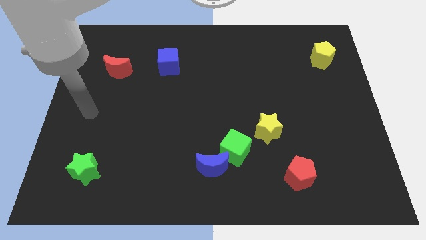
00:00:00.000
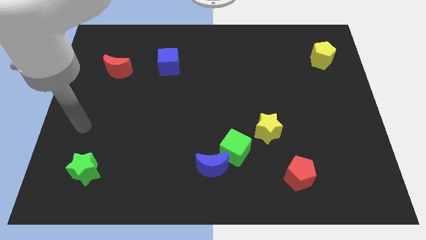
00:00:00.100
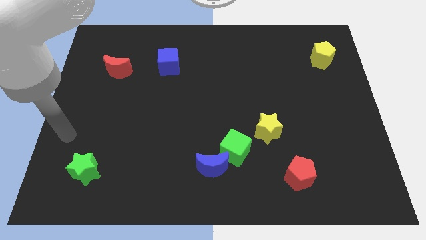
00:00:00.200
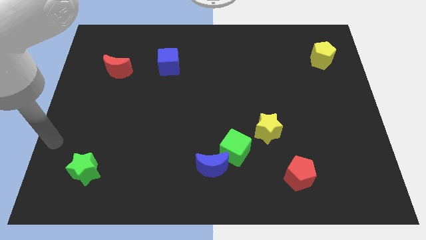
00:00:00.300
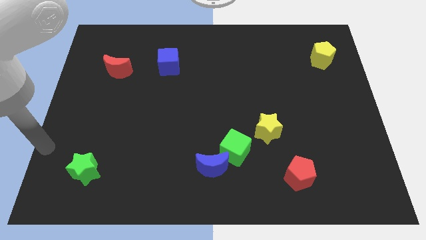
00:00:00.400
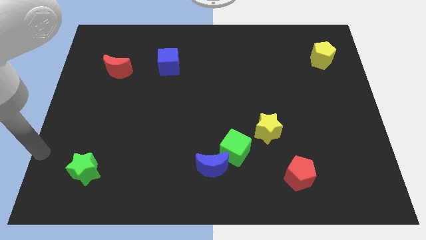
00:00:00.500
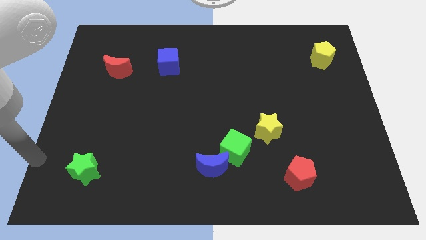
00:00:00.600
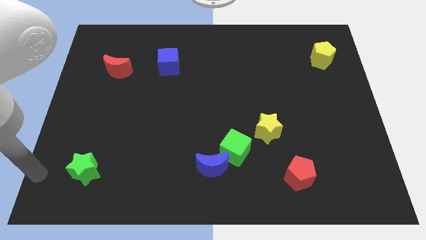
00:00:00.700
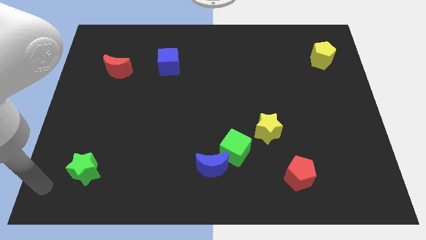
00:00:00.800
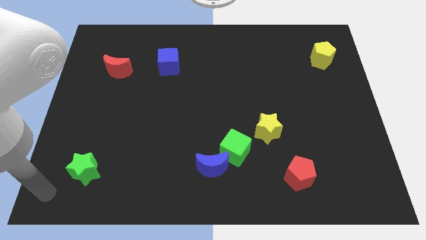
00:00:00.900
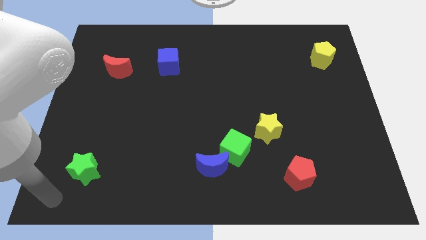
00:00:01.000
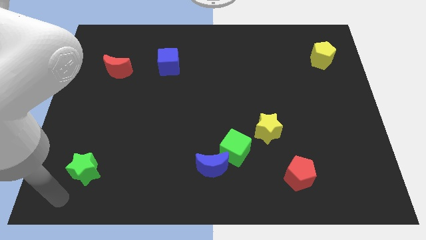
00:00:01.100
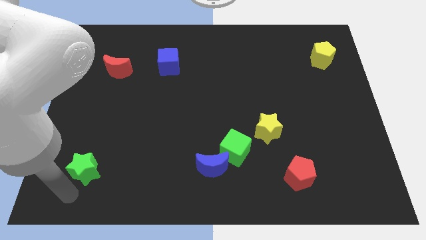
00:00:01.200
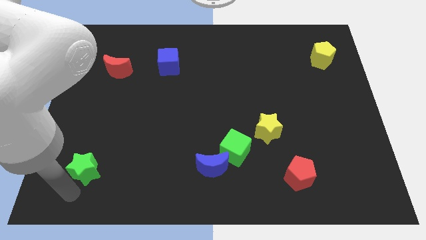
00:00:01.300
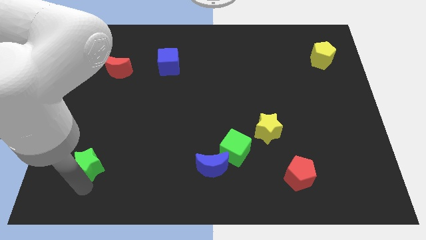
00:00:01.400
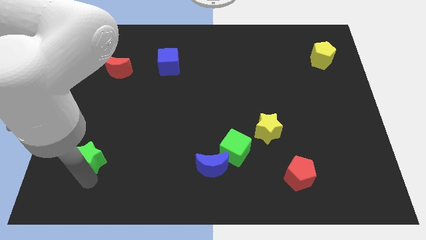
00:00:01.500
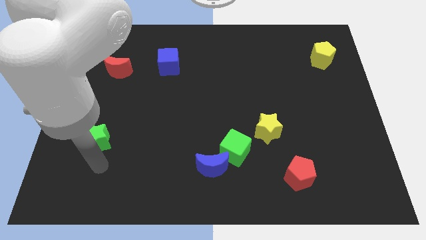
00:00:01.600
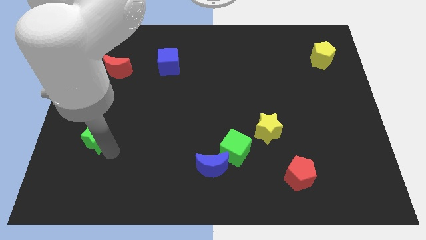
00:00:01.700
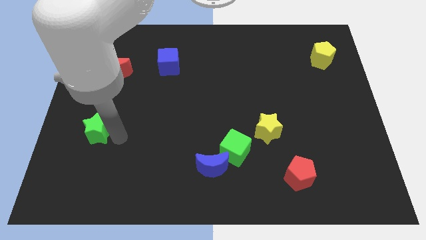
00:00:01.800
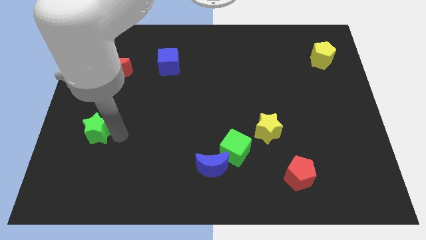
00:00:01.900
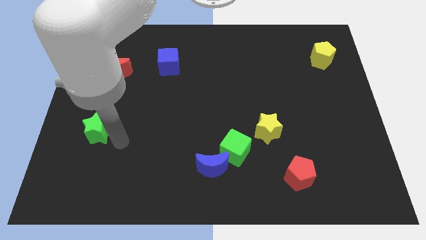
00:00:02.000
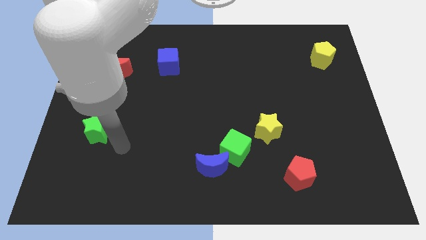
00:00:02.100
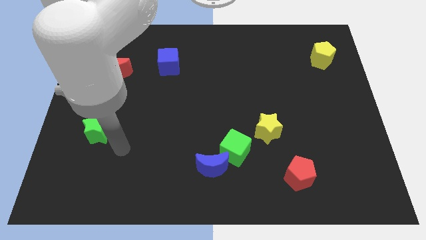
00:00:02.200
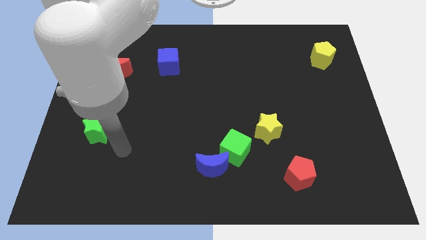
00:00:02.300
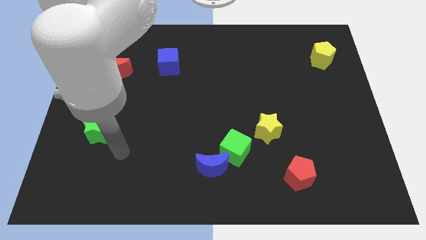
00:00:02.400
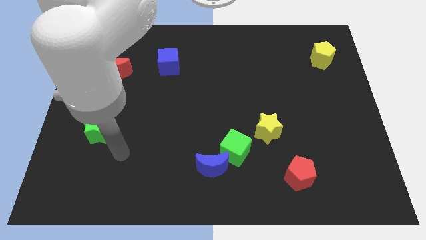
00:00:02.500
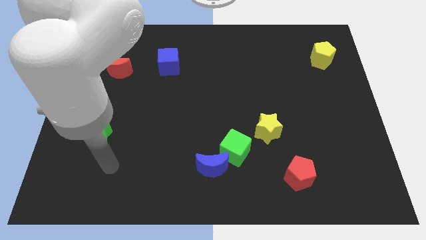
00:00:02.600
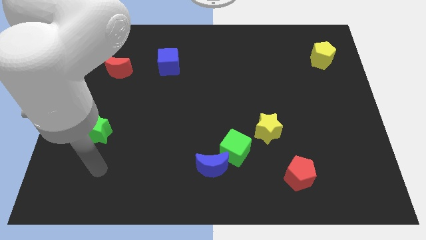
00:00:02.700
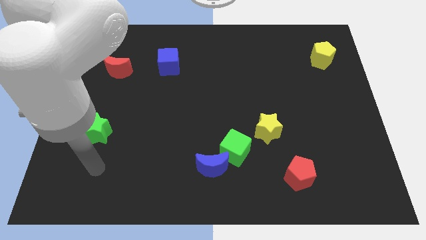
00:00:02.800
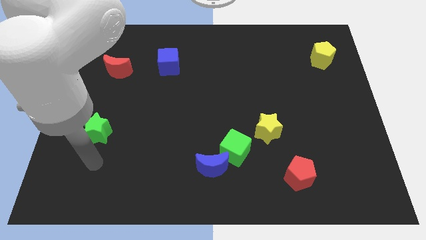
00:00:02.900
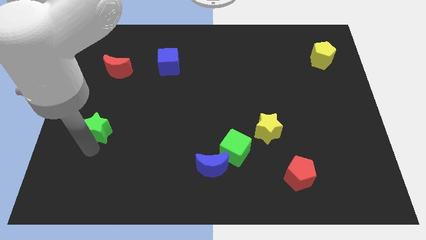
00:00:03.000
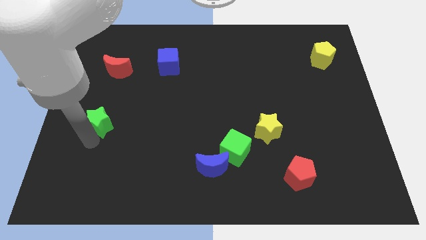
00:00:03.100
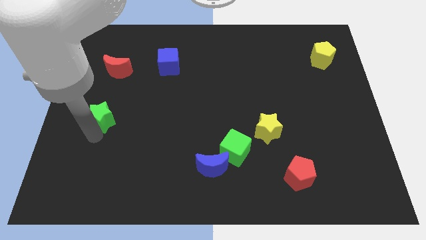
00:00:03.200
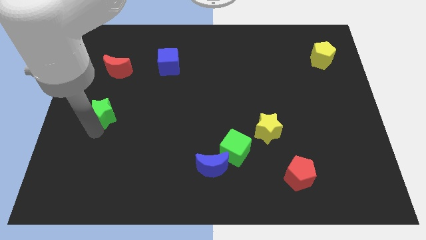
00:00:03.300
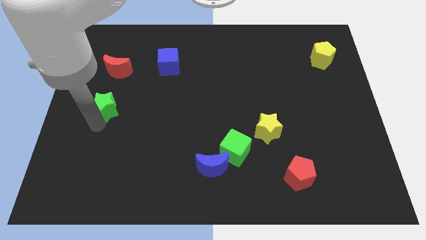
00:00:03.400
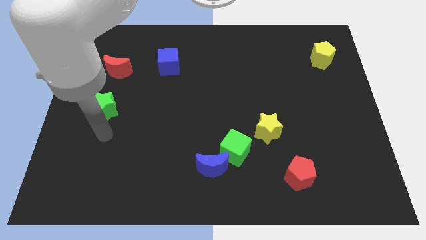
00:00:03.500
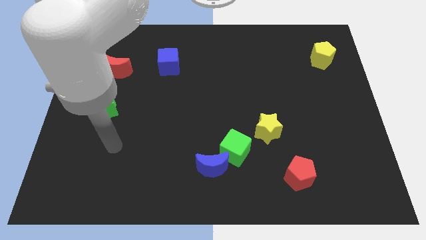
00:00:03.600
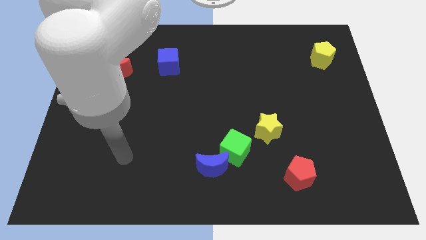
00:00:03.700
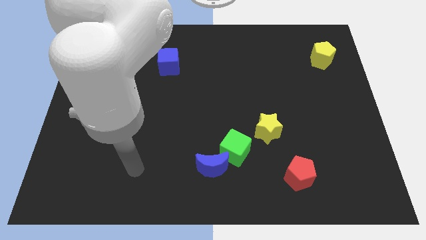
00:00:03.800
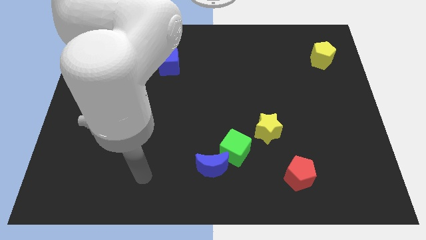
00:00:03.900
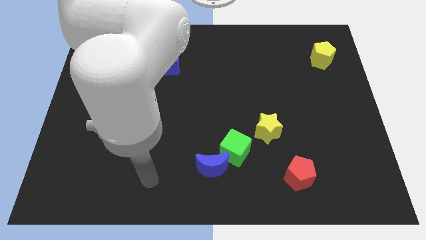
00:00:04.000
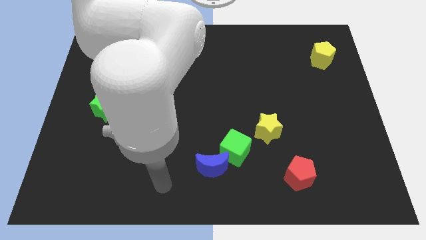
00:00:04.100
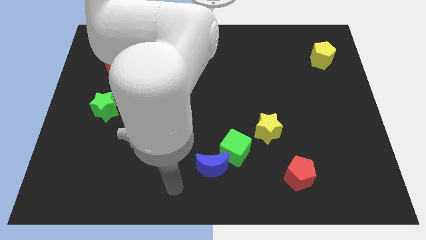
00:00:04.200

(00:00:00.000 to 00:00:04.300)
place green star to the bottom of red crescent

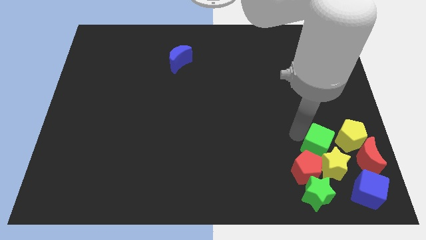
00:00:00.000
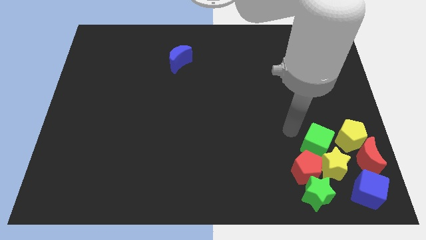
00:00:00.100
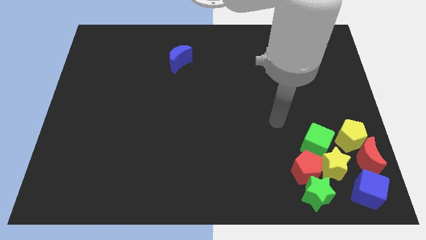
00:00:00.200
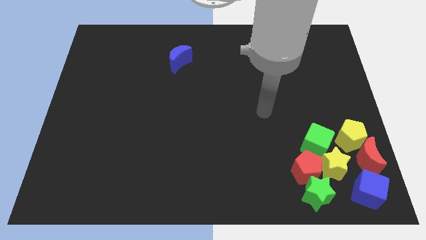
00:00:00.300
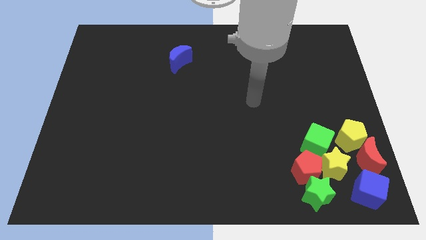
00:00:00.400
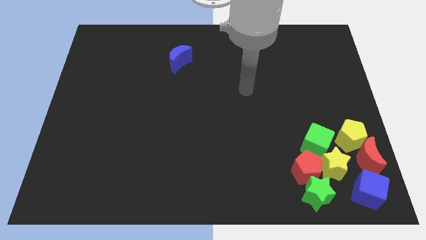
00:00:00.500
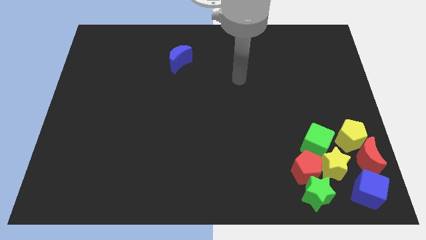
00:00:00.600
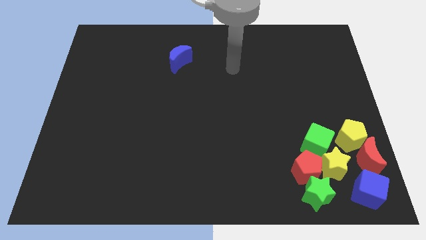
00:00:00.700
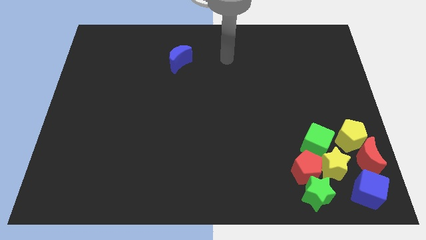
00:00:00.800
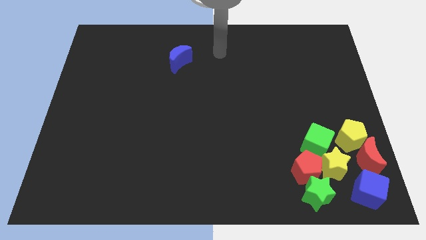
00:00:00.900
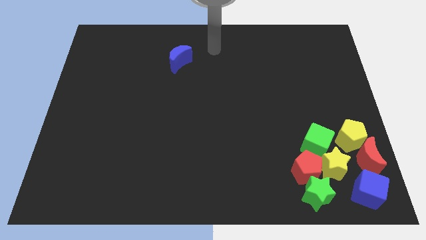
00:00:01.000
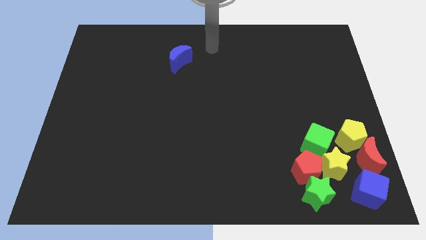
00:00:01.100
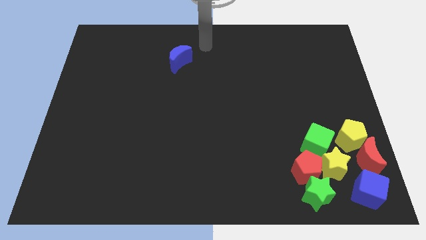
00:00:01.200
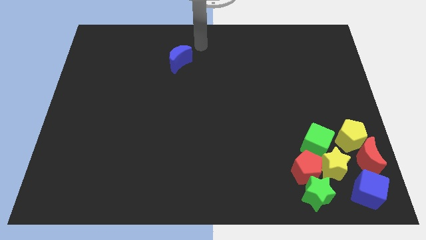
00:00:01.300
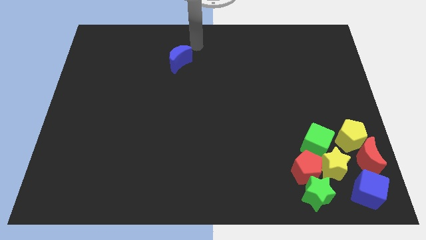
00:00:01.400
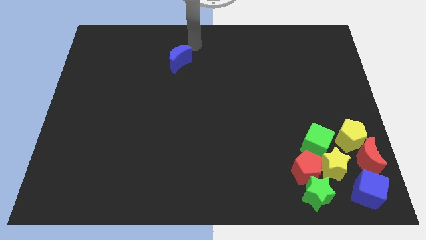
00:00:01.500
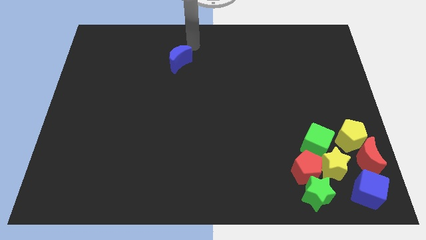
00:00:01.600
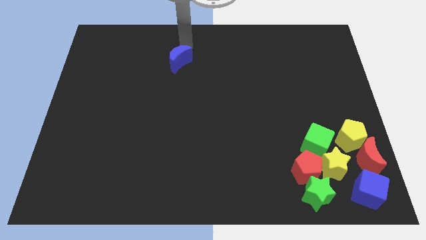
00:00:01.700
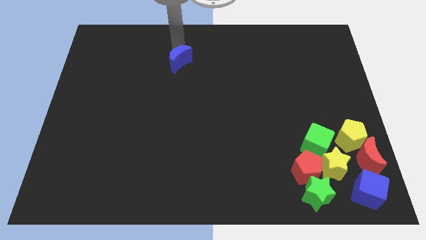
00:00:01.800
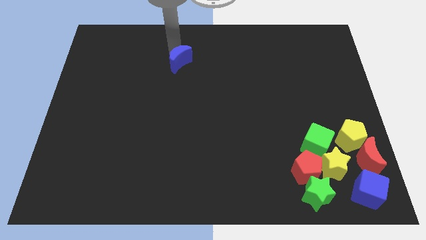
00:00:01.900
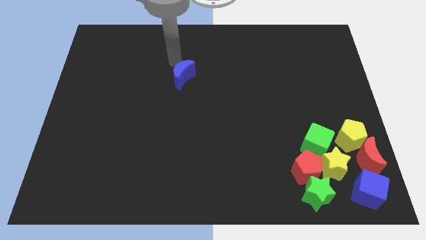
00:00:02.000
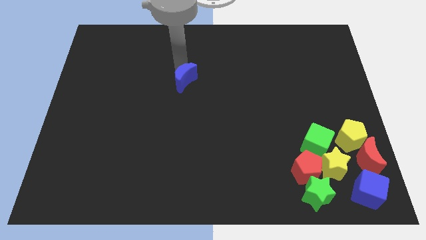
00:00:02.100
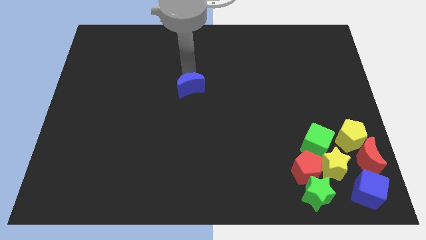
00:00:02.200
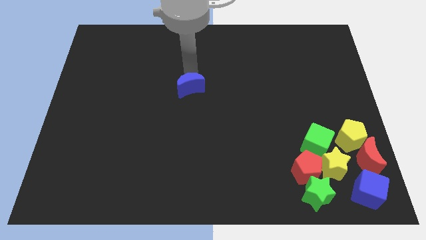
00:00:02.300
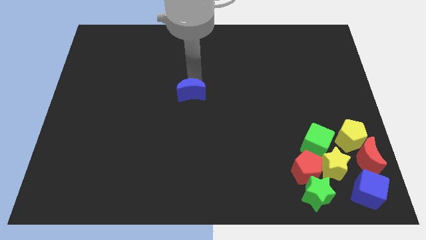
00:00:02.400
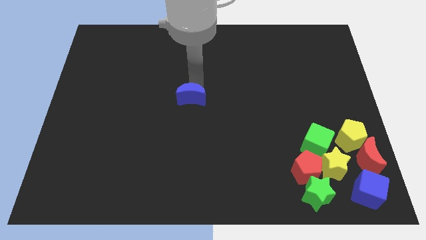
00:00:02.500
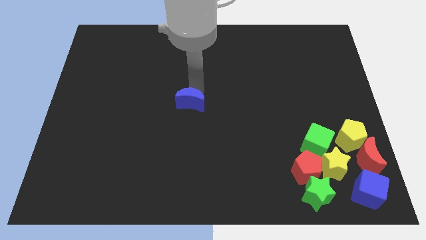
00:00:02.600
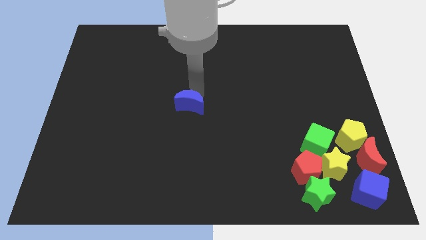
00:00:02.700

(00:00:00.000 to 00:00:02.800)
place the blue moon at the center of the board

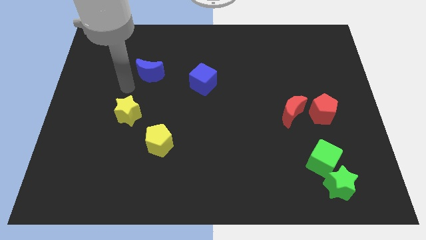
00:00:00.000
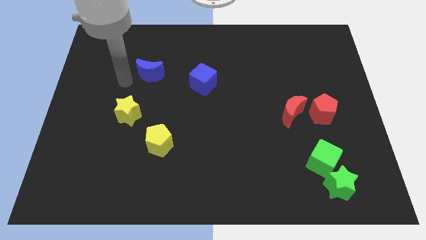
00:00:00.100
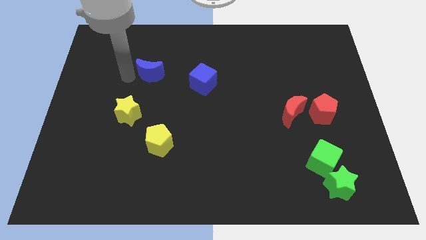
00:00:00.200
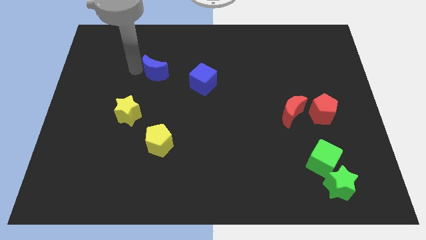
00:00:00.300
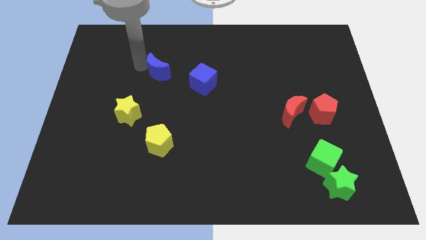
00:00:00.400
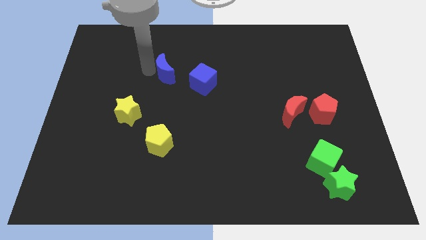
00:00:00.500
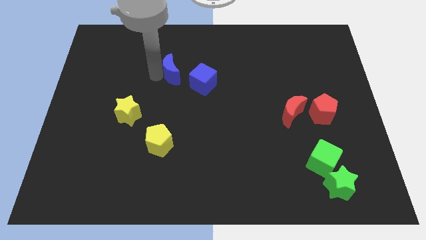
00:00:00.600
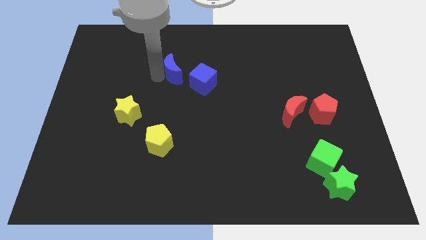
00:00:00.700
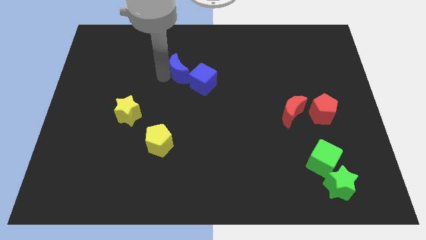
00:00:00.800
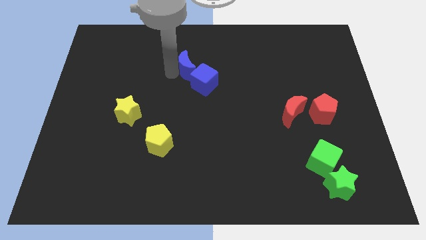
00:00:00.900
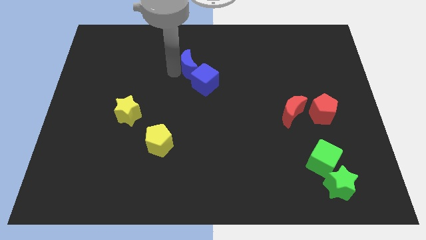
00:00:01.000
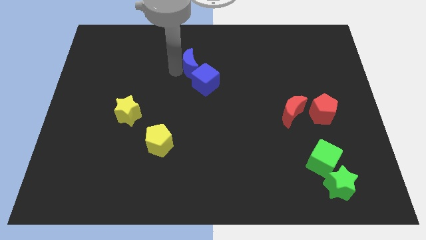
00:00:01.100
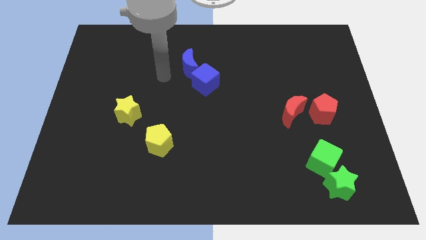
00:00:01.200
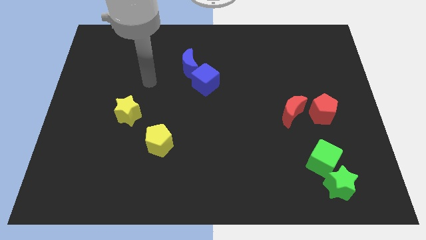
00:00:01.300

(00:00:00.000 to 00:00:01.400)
move the blue crescent to the top left side of the blue cube

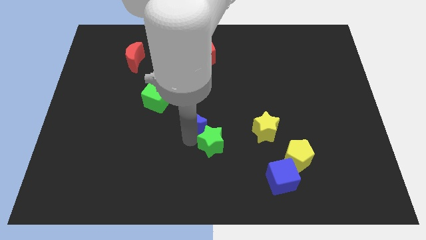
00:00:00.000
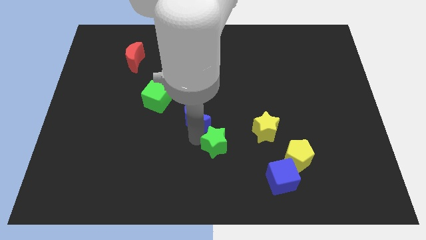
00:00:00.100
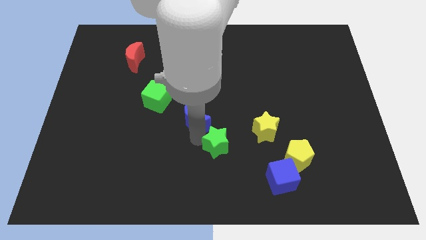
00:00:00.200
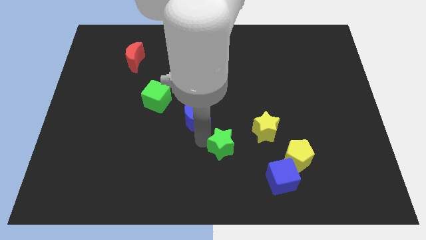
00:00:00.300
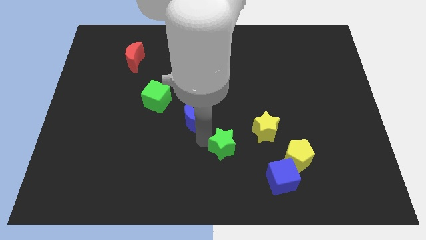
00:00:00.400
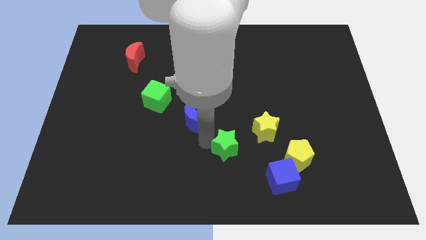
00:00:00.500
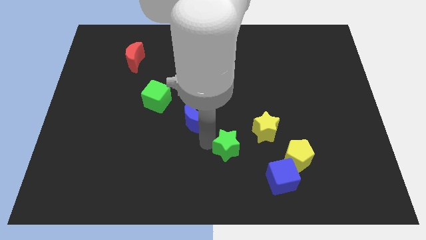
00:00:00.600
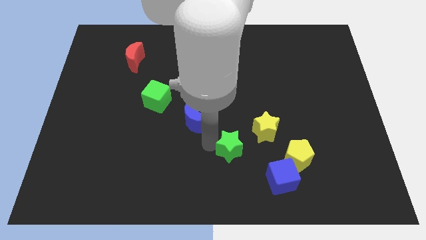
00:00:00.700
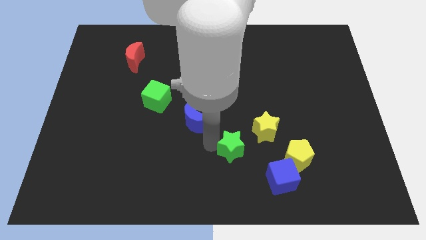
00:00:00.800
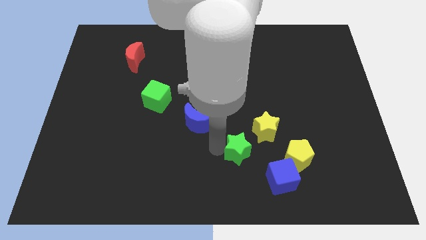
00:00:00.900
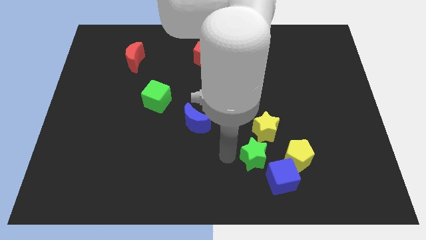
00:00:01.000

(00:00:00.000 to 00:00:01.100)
move the green star to the top left of the blue cube
